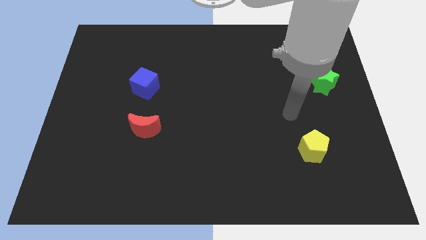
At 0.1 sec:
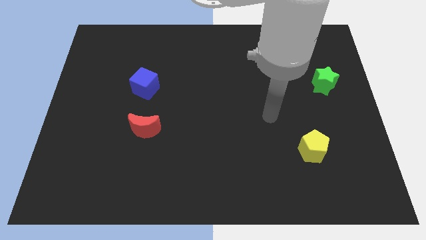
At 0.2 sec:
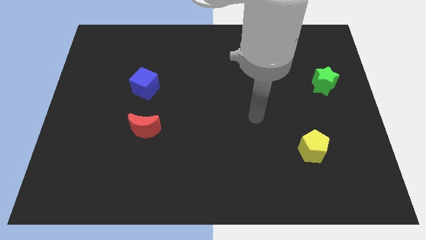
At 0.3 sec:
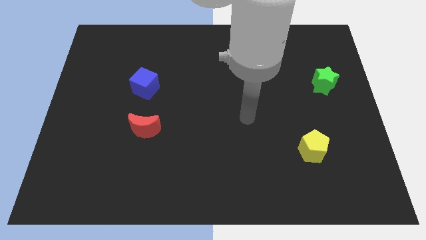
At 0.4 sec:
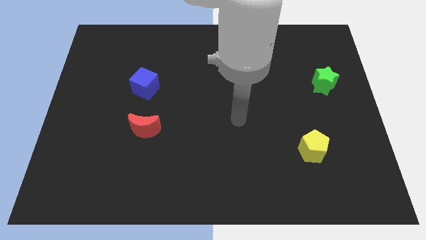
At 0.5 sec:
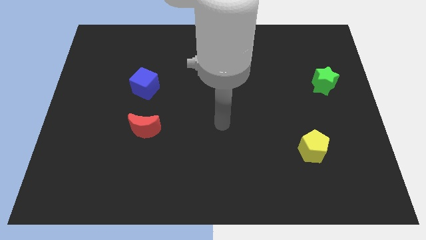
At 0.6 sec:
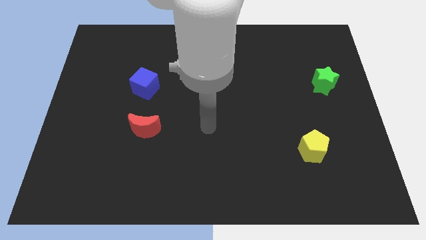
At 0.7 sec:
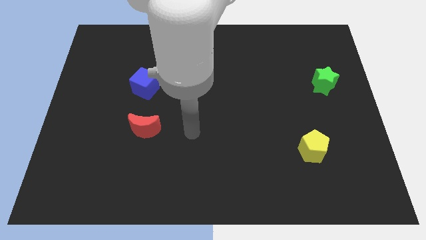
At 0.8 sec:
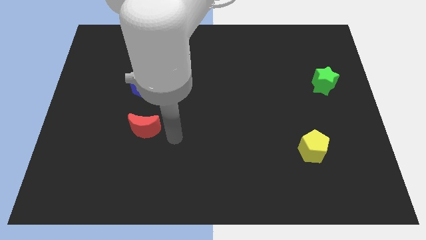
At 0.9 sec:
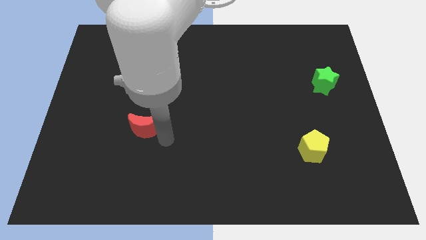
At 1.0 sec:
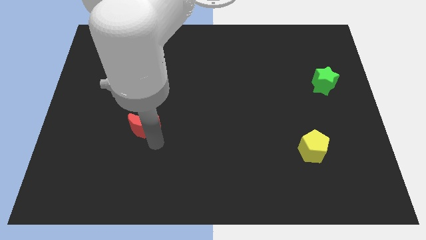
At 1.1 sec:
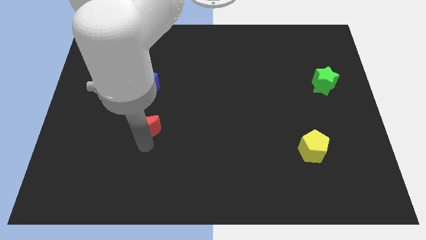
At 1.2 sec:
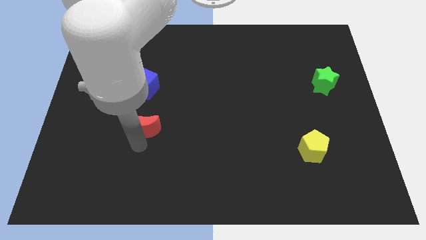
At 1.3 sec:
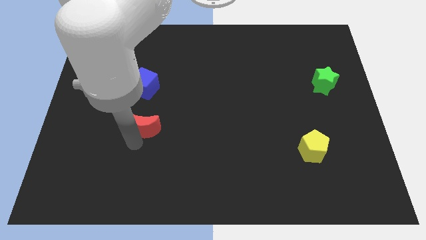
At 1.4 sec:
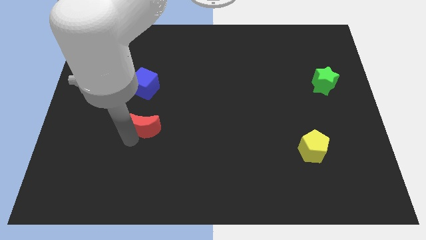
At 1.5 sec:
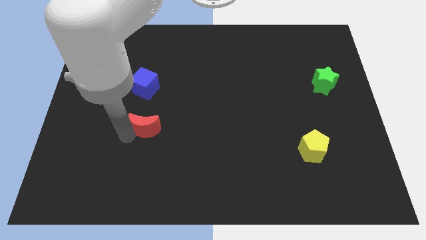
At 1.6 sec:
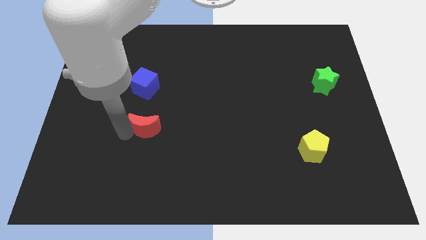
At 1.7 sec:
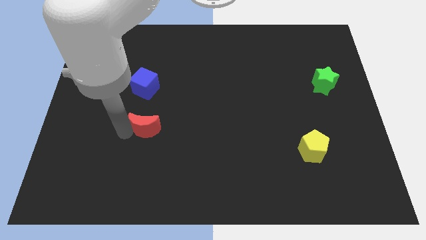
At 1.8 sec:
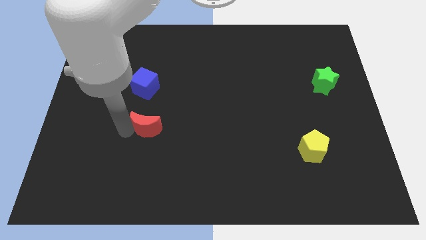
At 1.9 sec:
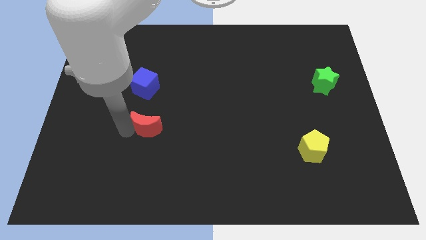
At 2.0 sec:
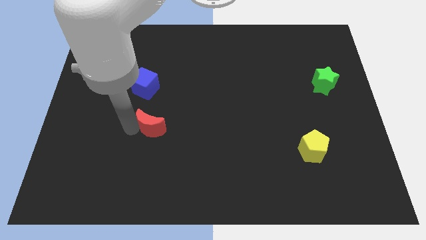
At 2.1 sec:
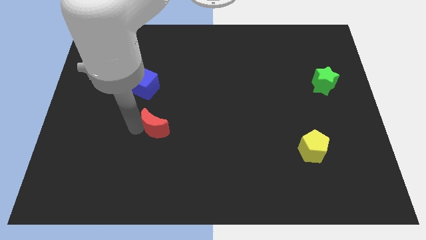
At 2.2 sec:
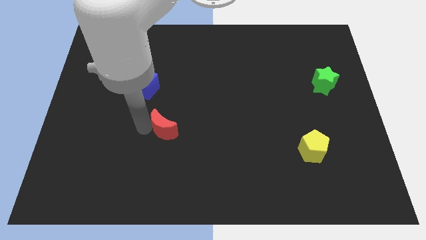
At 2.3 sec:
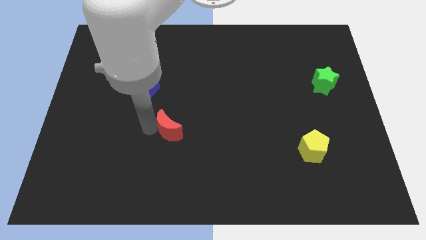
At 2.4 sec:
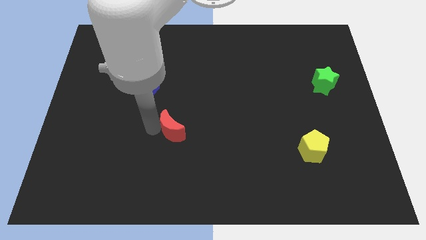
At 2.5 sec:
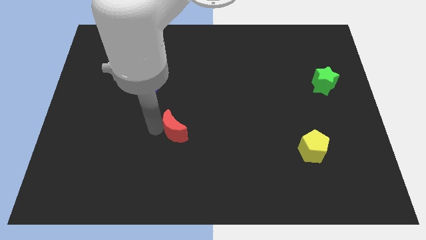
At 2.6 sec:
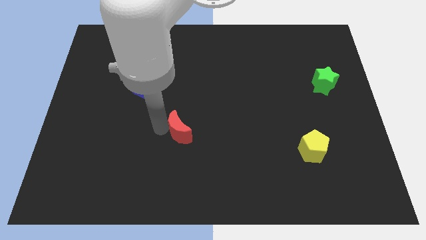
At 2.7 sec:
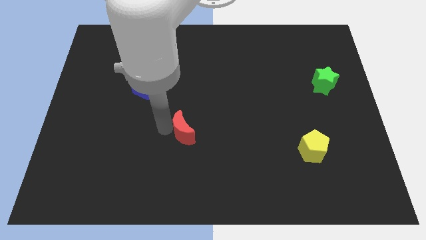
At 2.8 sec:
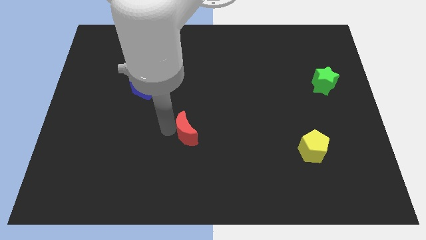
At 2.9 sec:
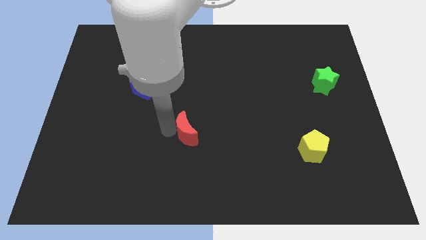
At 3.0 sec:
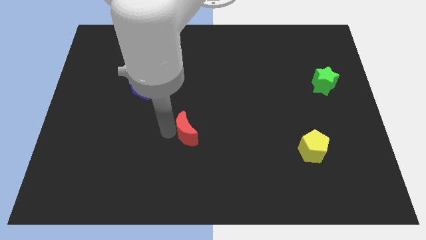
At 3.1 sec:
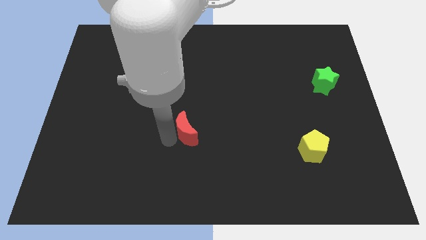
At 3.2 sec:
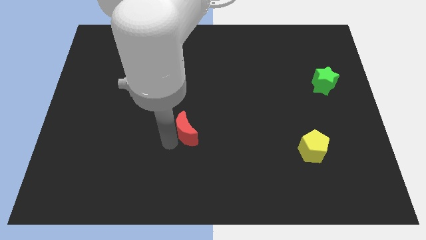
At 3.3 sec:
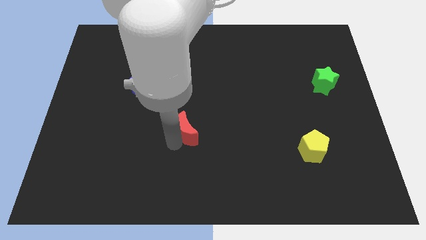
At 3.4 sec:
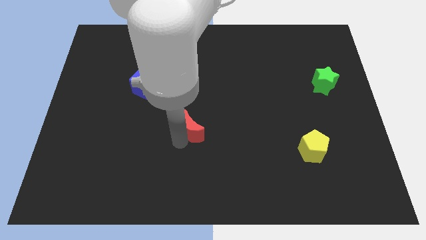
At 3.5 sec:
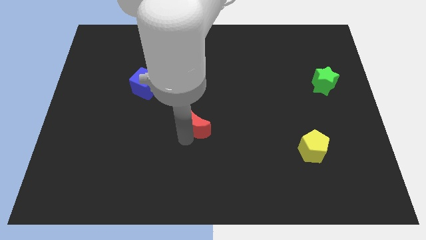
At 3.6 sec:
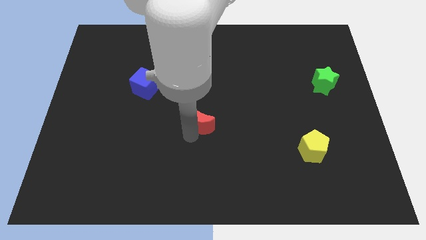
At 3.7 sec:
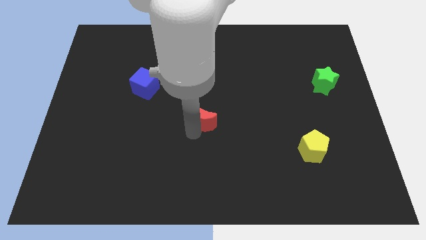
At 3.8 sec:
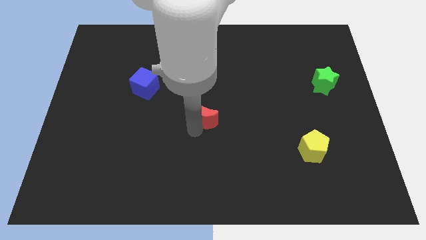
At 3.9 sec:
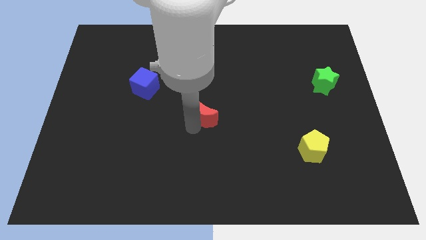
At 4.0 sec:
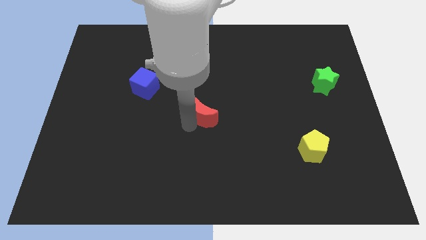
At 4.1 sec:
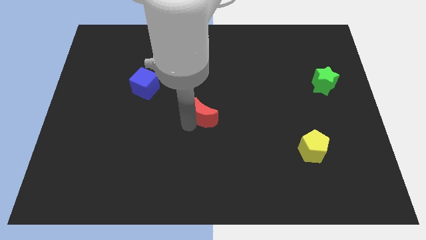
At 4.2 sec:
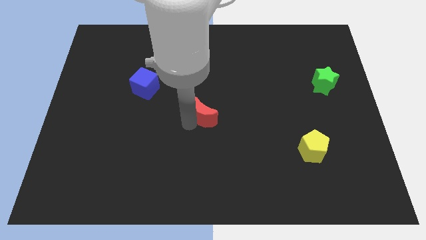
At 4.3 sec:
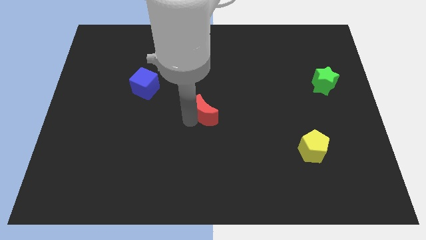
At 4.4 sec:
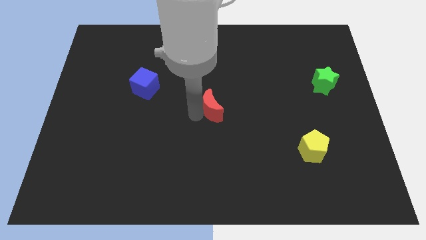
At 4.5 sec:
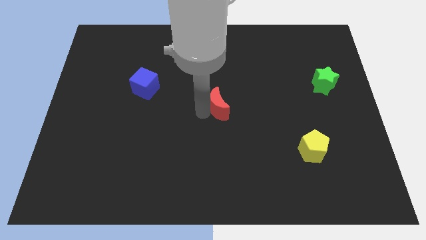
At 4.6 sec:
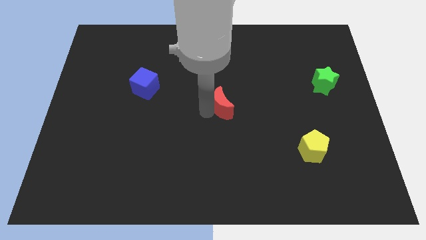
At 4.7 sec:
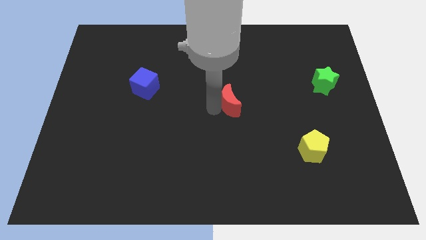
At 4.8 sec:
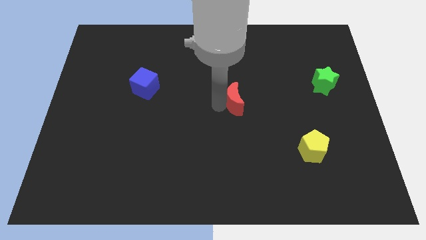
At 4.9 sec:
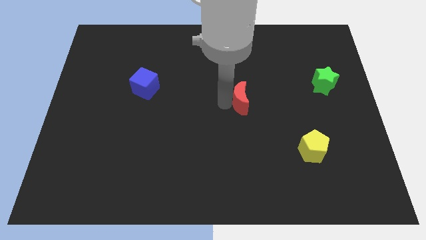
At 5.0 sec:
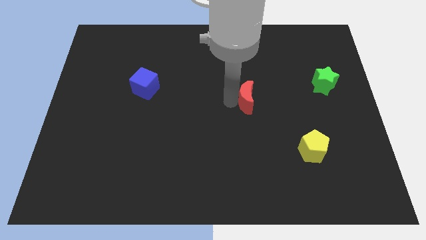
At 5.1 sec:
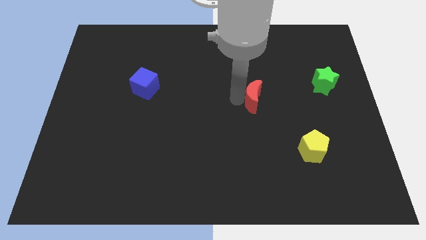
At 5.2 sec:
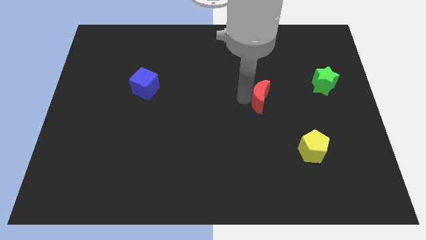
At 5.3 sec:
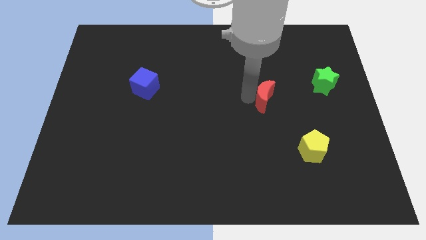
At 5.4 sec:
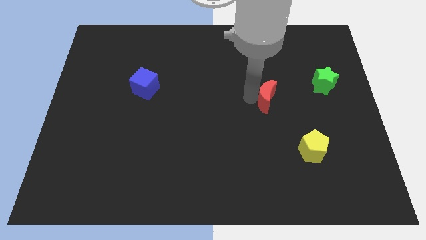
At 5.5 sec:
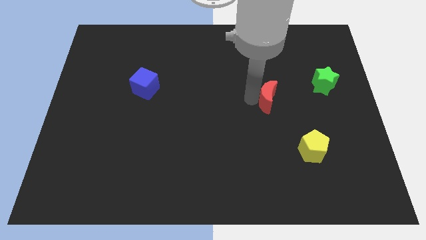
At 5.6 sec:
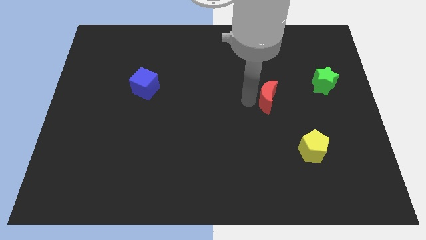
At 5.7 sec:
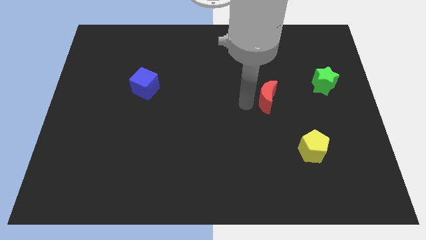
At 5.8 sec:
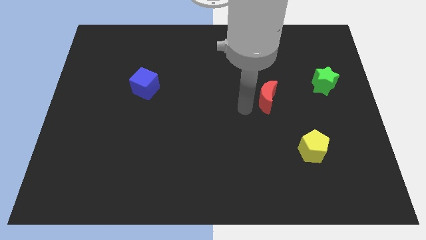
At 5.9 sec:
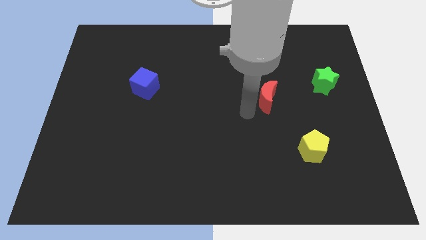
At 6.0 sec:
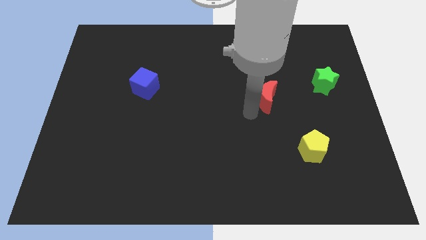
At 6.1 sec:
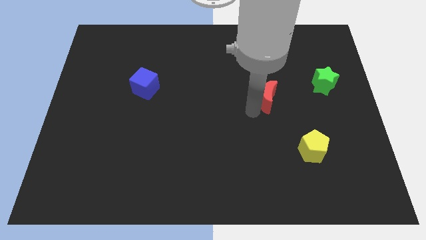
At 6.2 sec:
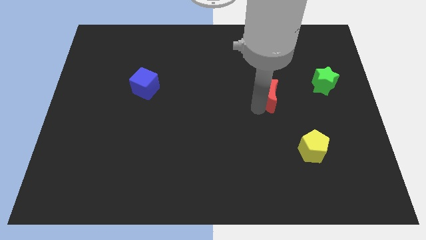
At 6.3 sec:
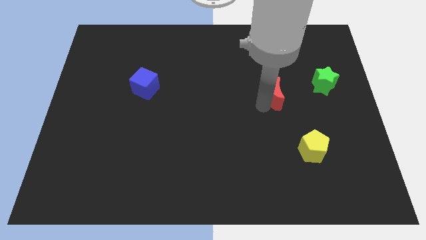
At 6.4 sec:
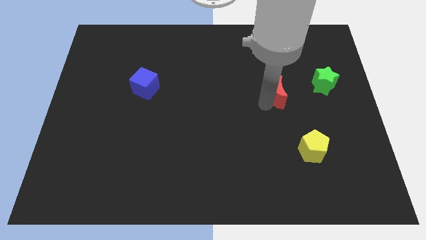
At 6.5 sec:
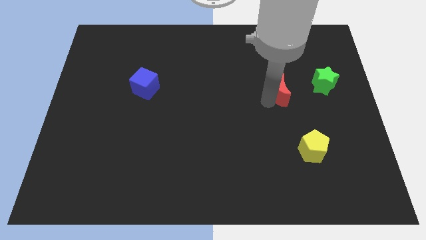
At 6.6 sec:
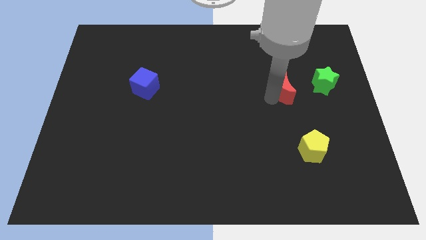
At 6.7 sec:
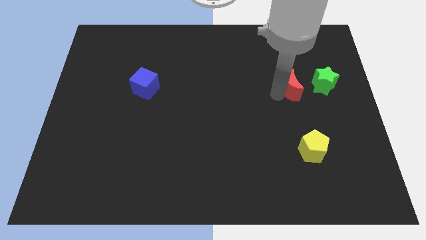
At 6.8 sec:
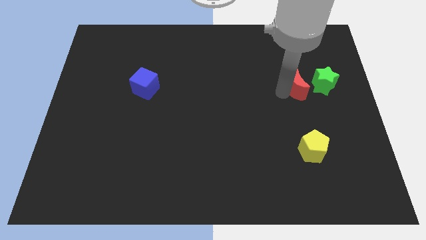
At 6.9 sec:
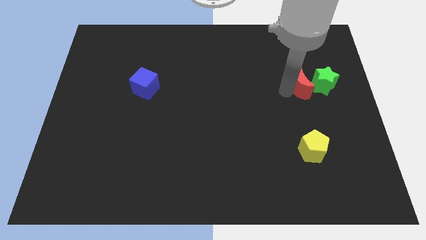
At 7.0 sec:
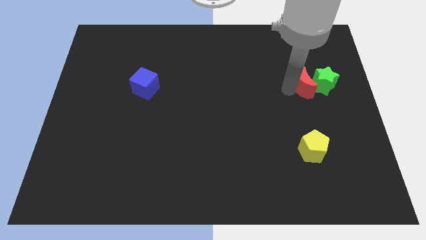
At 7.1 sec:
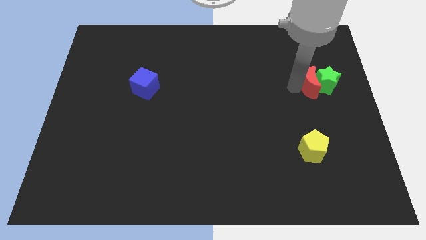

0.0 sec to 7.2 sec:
put the red block towards the green block

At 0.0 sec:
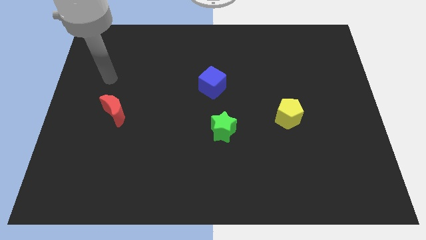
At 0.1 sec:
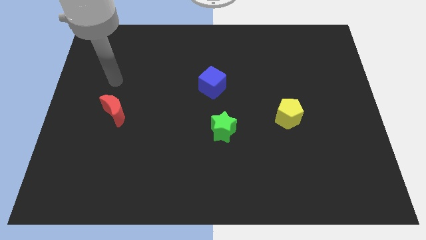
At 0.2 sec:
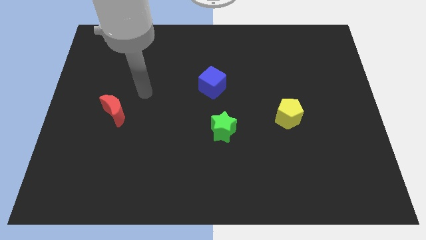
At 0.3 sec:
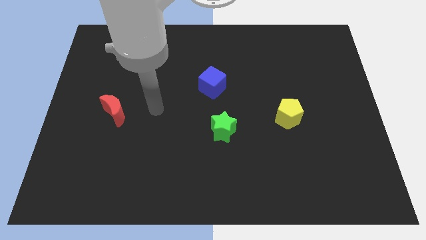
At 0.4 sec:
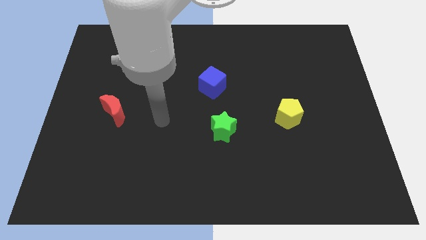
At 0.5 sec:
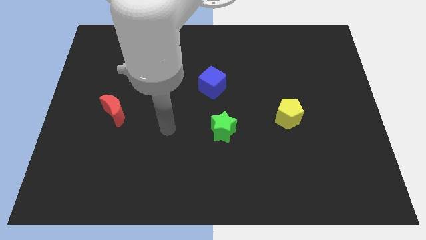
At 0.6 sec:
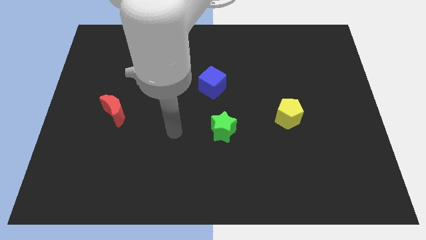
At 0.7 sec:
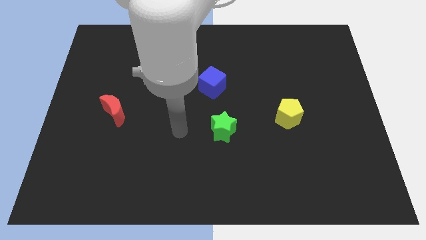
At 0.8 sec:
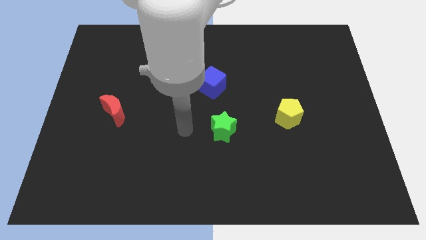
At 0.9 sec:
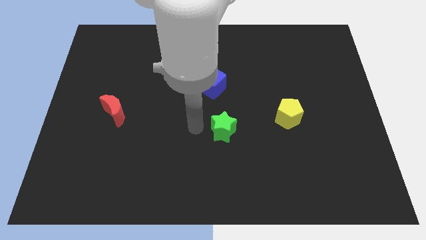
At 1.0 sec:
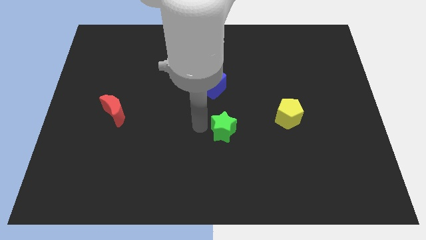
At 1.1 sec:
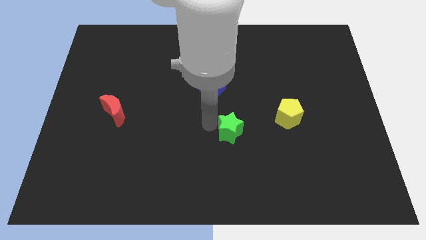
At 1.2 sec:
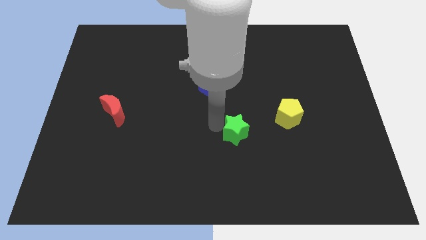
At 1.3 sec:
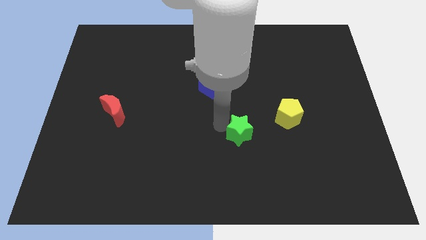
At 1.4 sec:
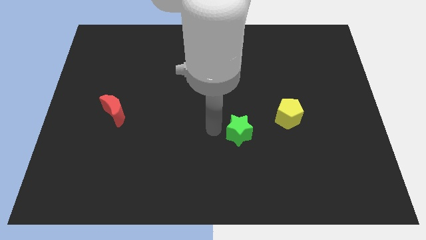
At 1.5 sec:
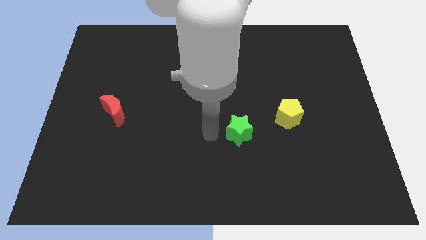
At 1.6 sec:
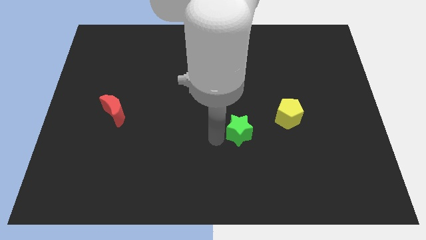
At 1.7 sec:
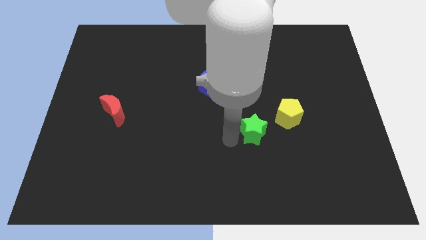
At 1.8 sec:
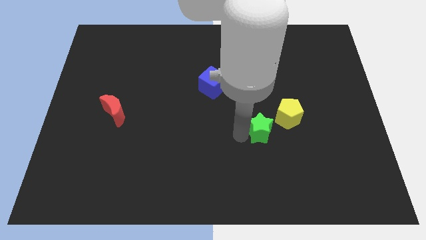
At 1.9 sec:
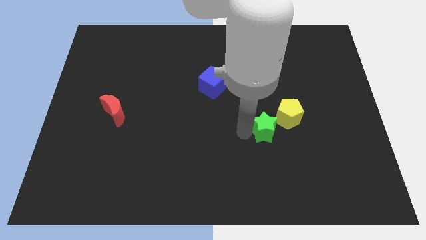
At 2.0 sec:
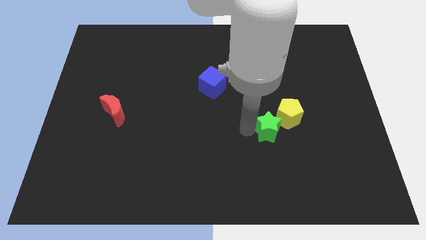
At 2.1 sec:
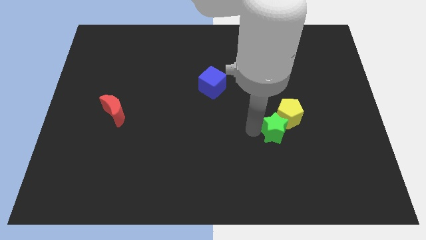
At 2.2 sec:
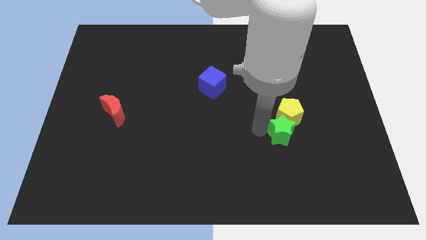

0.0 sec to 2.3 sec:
put the star to the yellow pentagon
